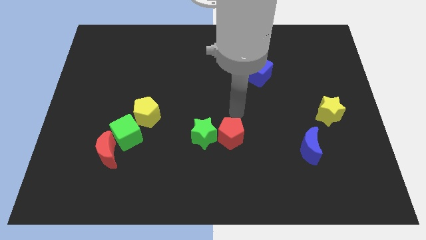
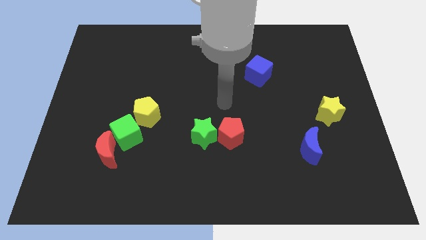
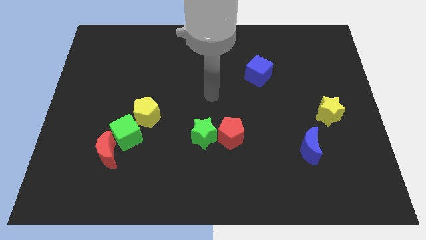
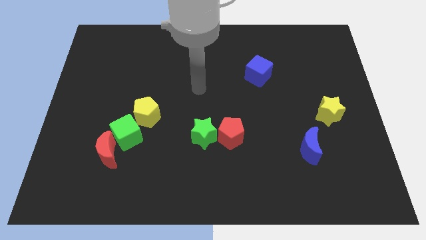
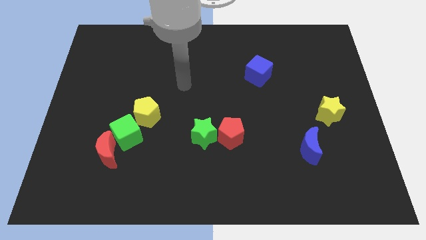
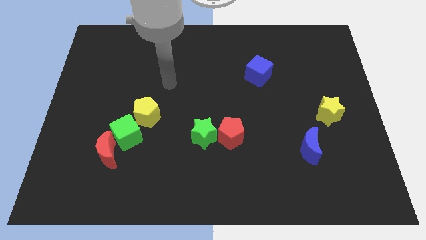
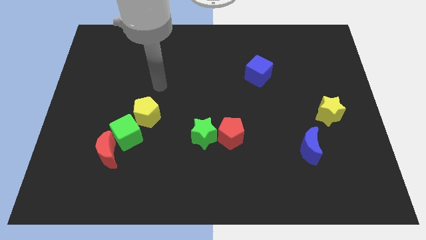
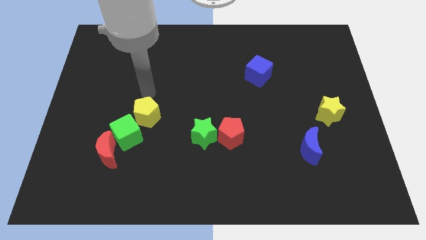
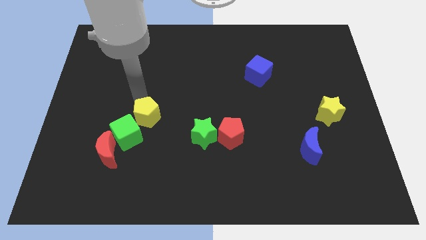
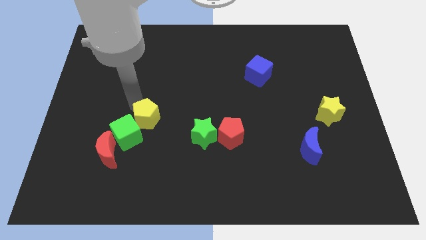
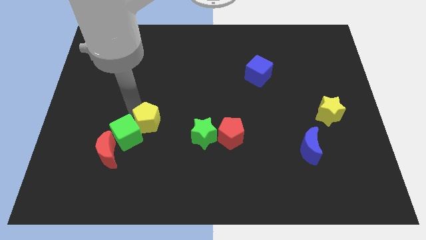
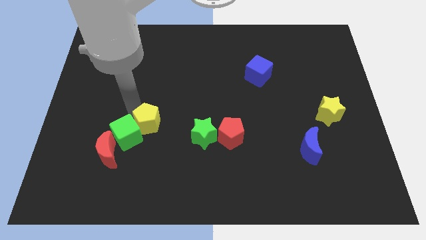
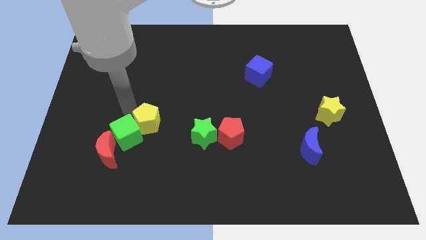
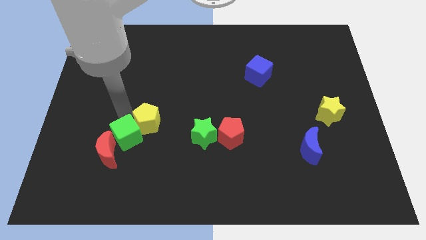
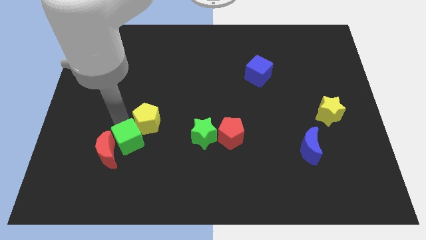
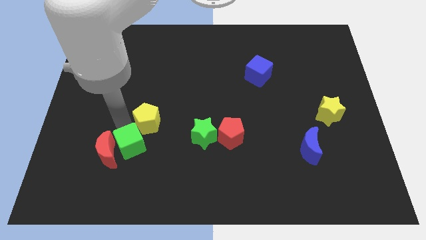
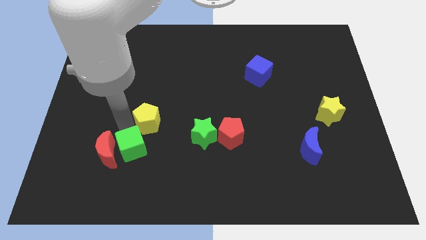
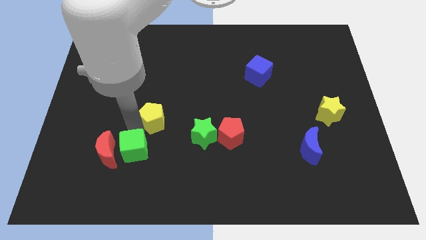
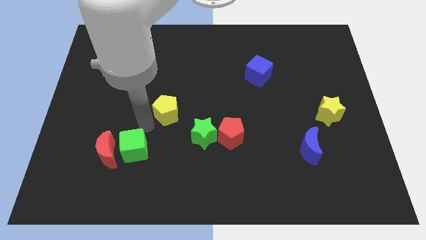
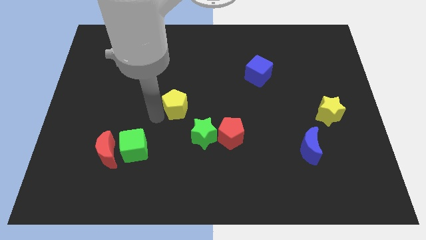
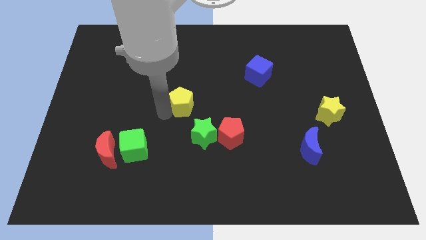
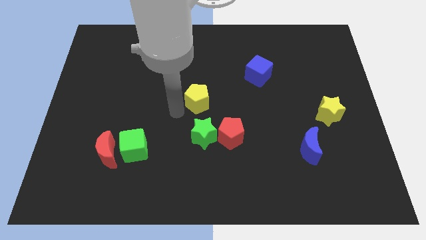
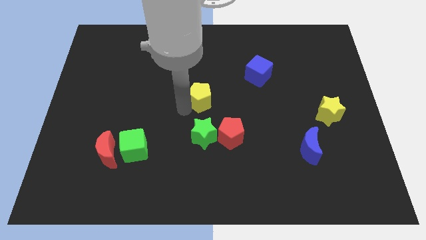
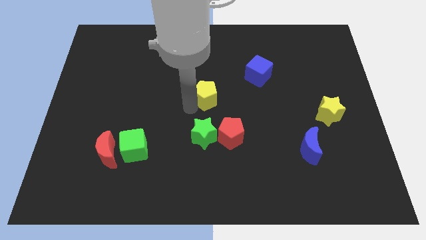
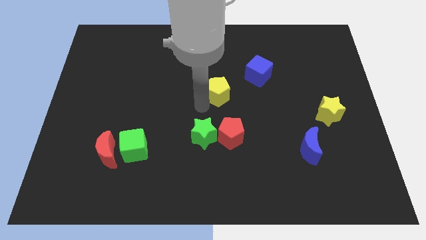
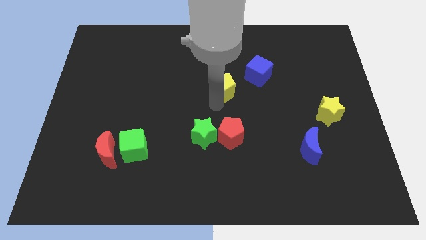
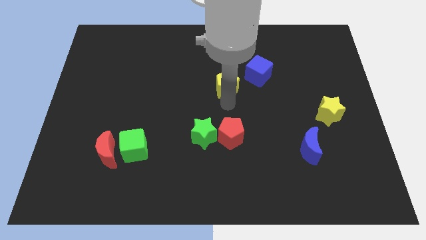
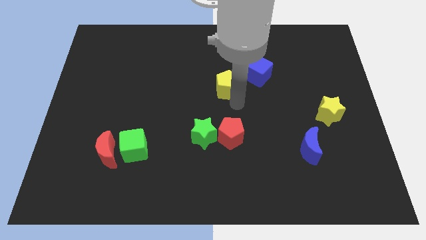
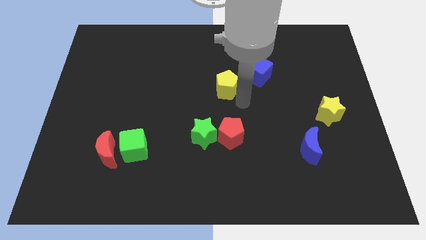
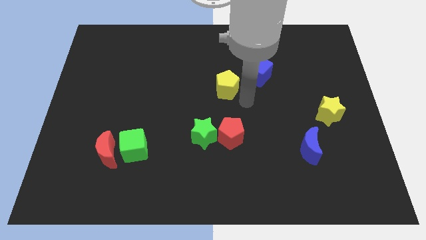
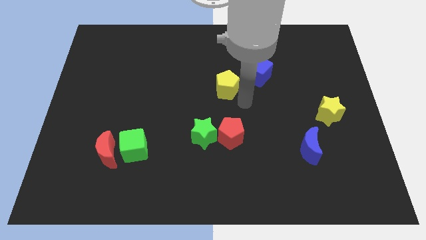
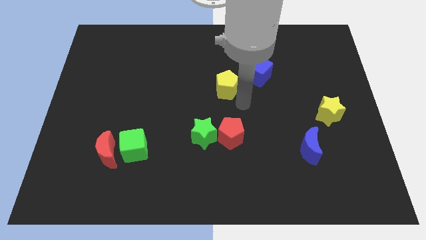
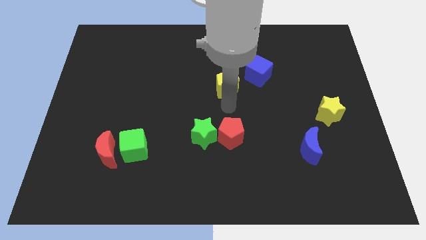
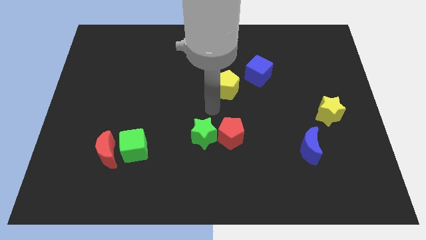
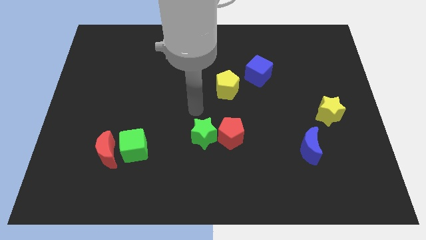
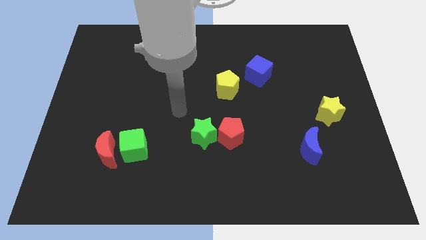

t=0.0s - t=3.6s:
push the yellow pentagon to the left of the blue cube

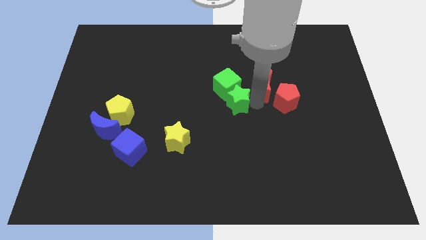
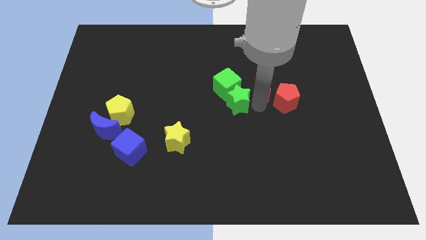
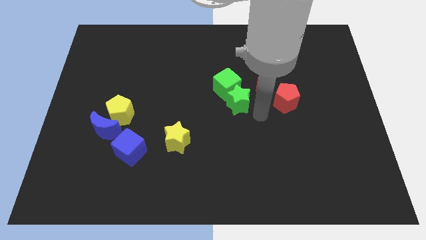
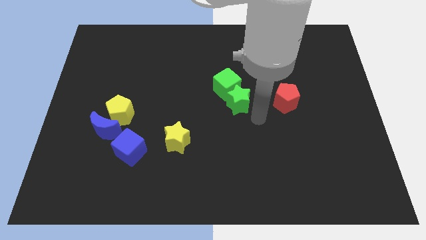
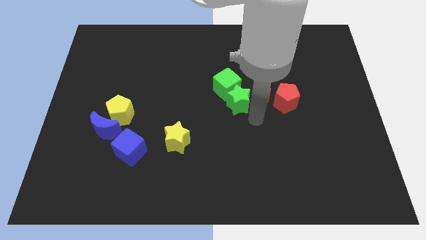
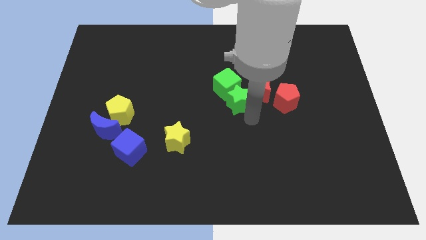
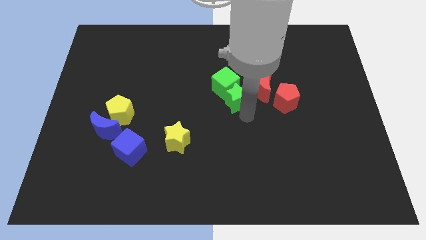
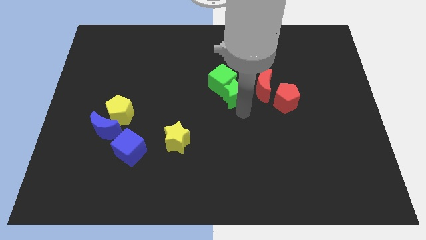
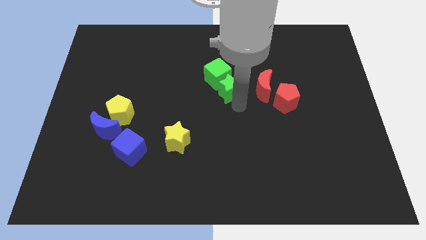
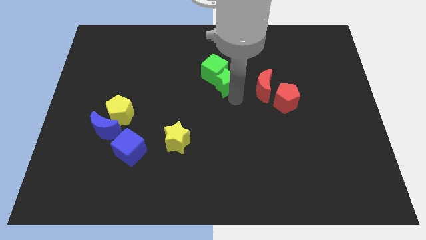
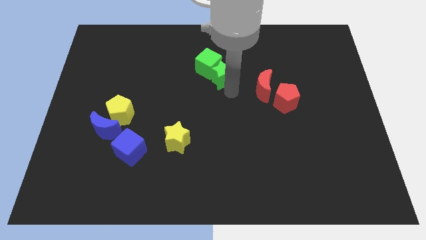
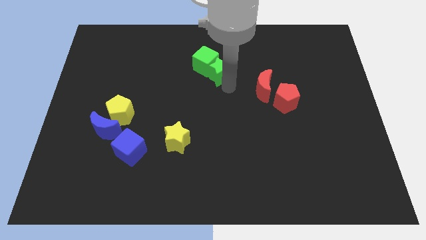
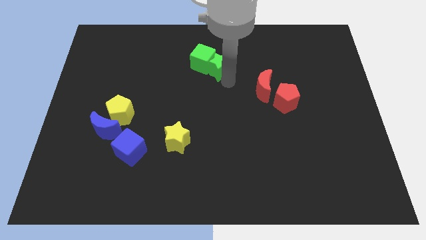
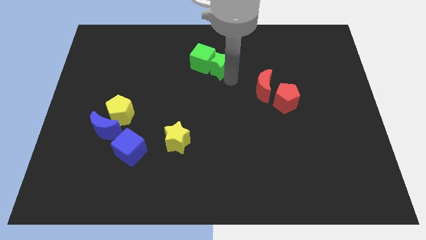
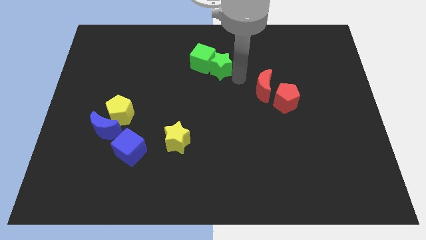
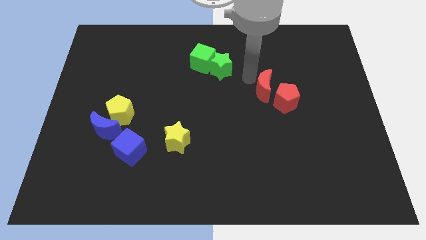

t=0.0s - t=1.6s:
drag green cube with the help of the green star to the top center of the board

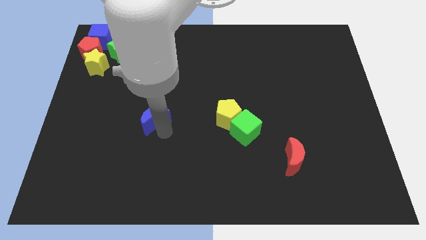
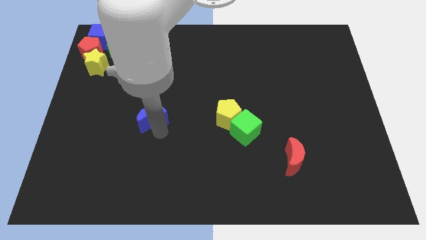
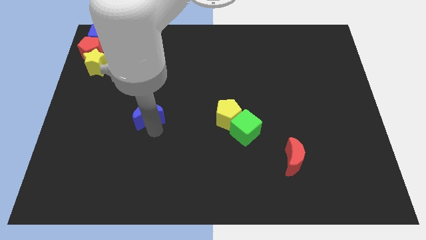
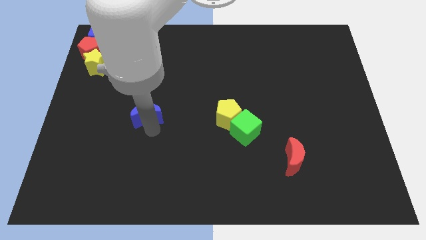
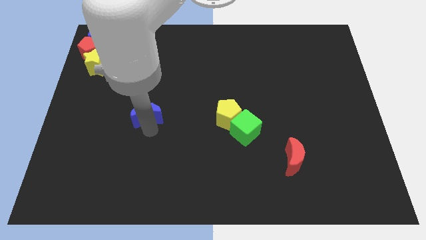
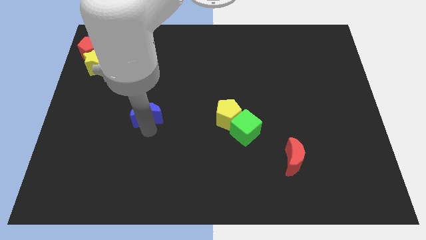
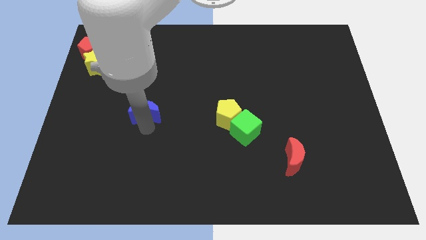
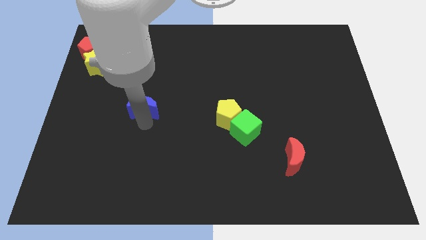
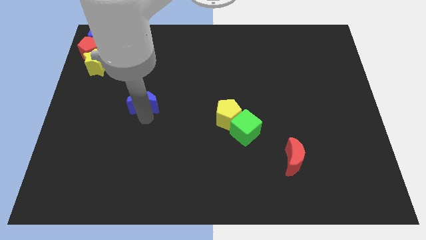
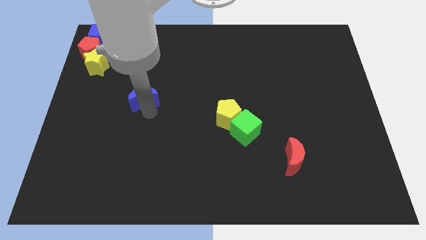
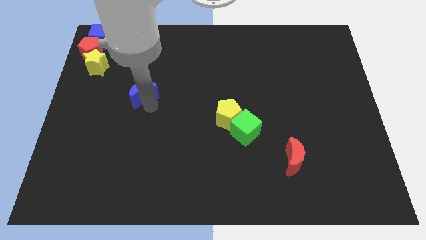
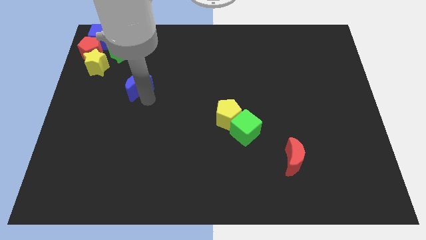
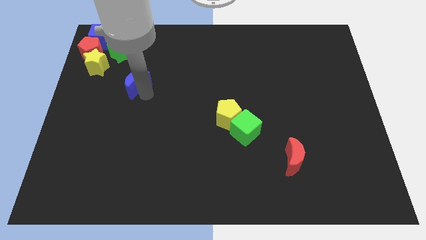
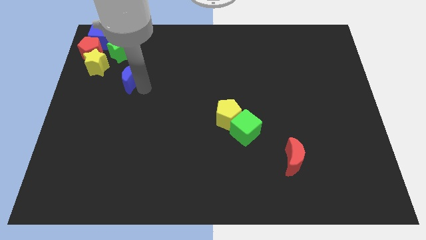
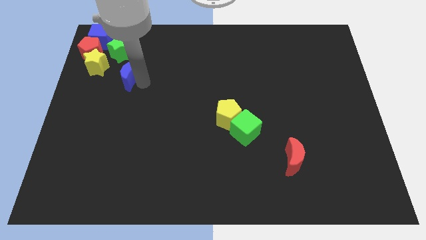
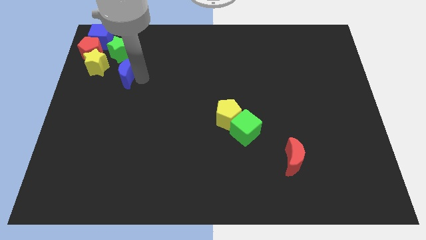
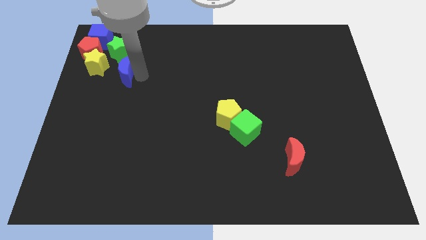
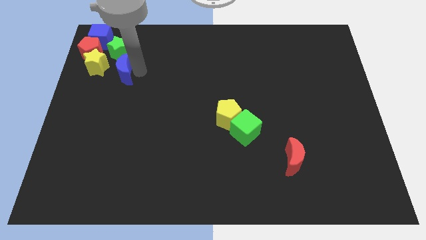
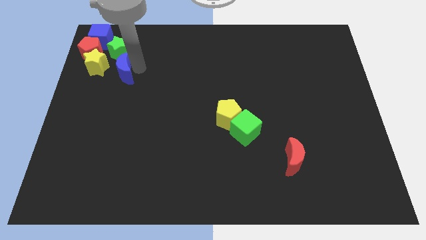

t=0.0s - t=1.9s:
move the blue crescent towards the bottom side of the green star

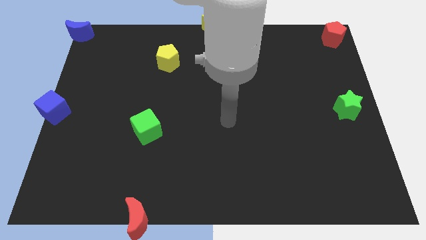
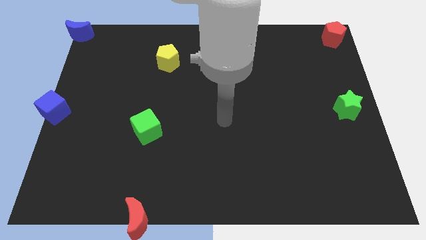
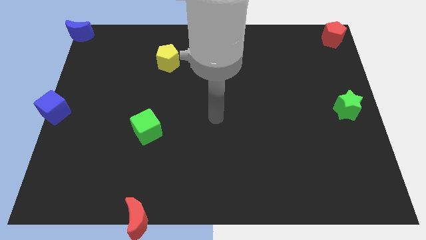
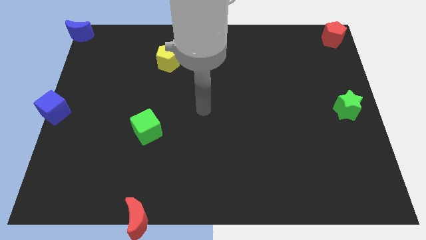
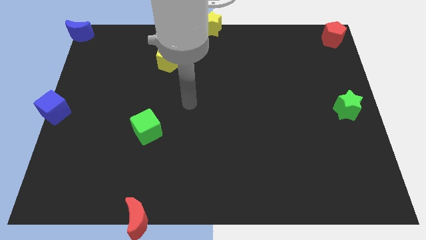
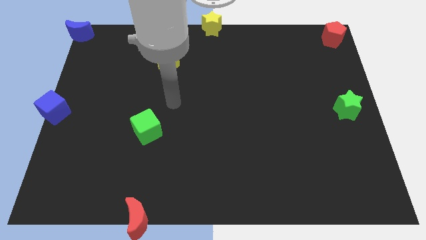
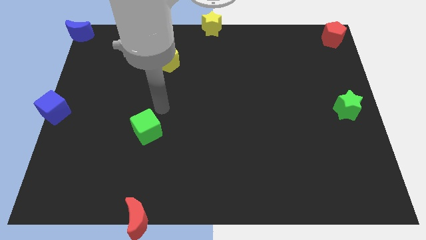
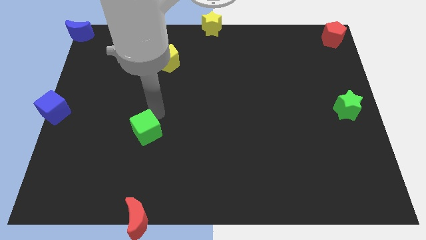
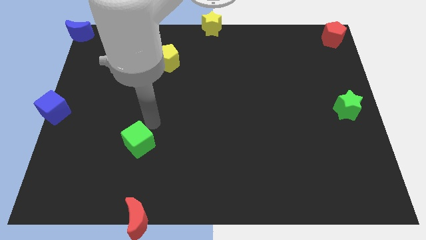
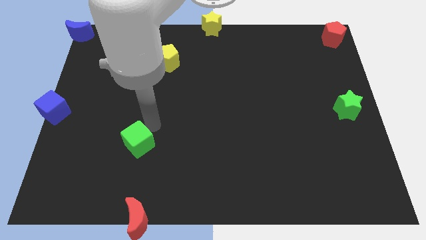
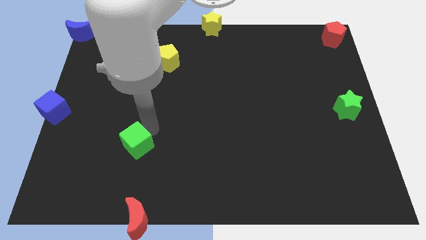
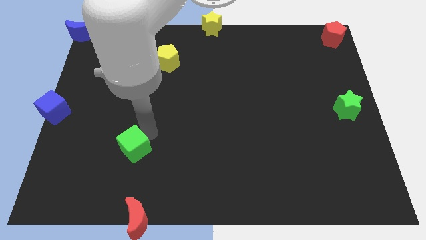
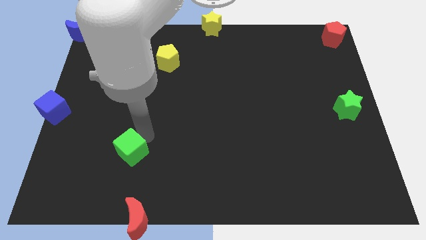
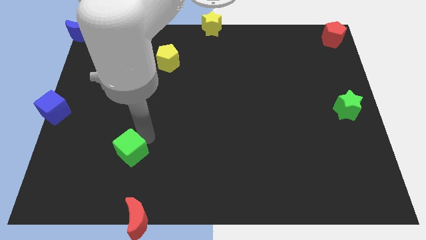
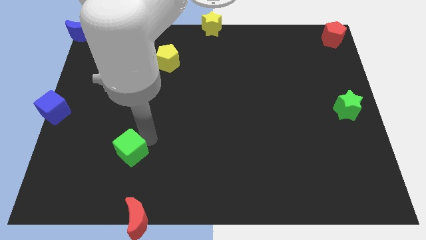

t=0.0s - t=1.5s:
place the green cube at the top of red moon

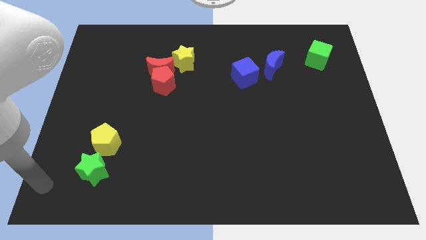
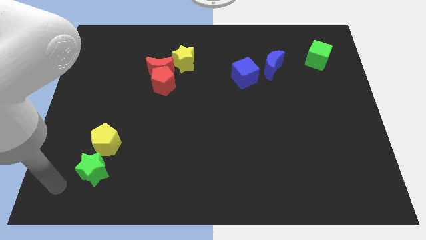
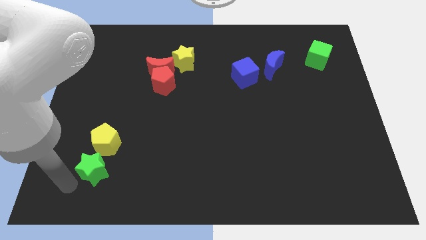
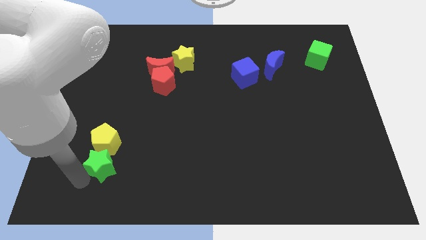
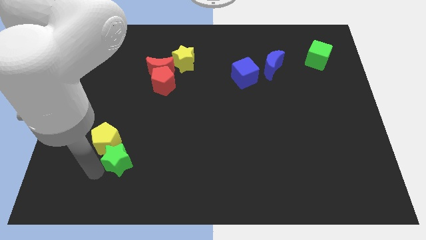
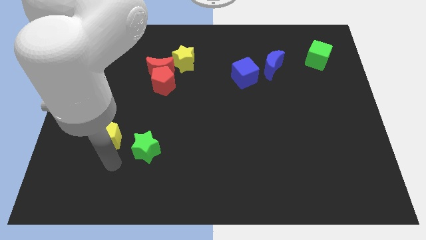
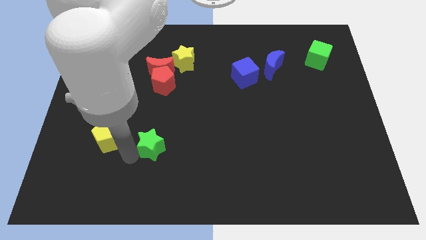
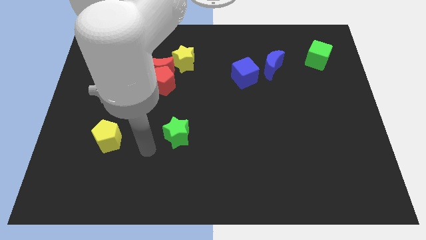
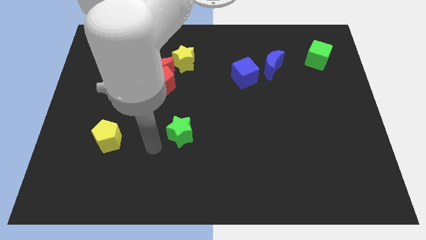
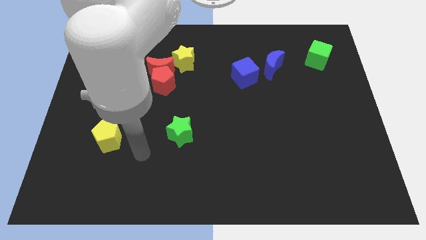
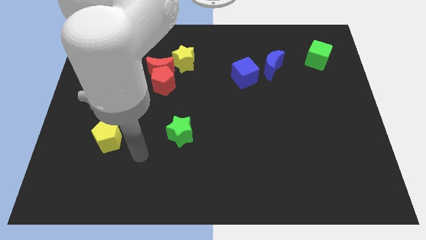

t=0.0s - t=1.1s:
push green star to the right of yellow pentagon
